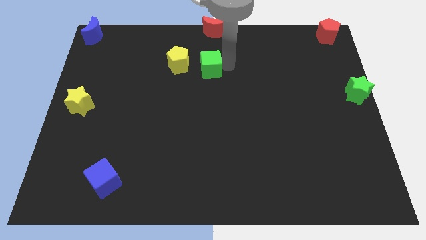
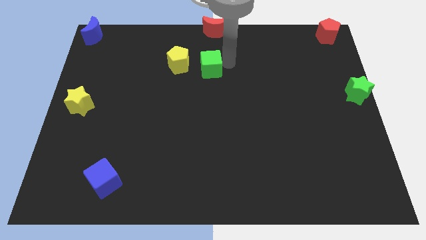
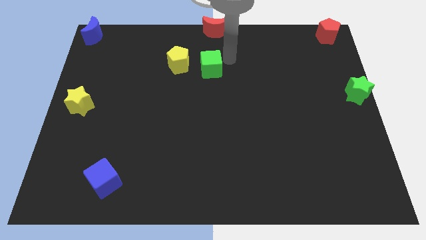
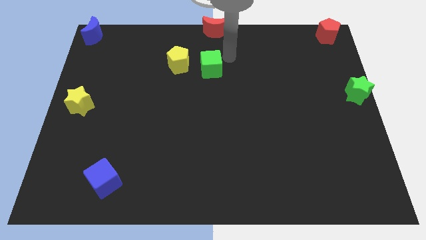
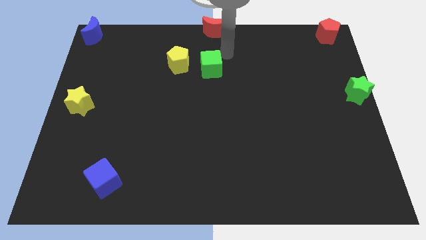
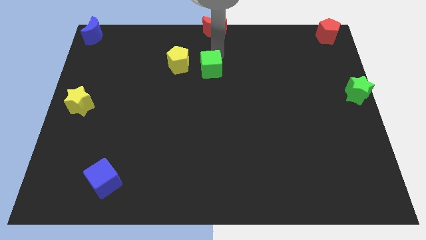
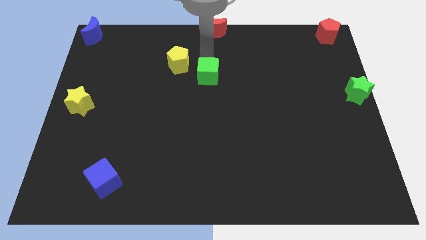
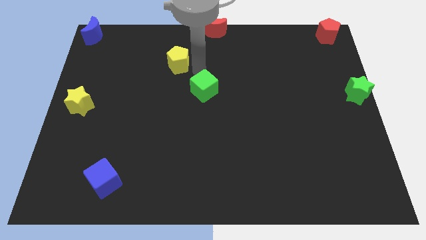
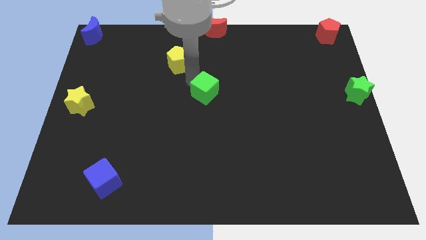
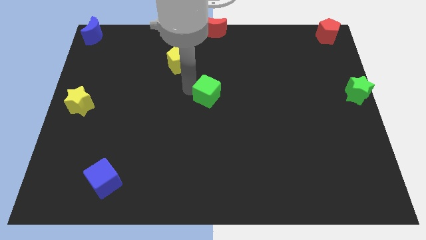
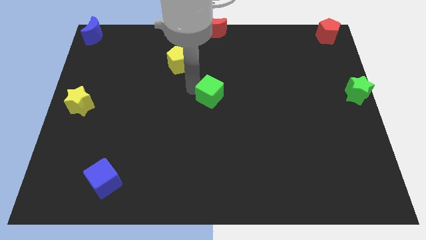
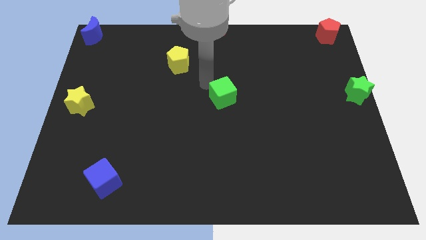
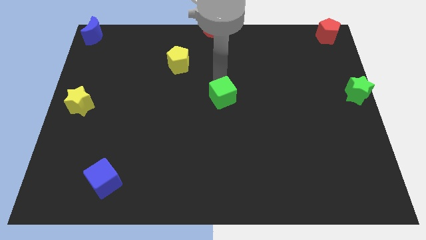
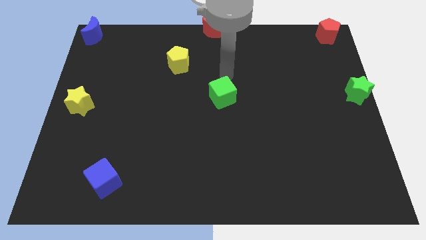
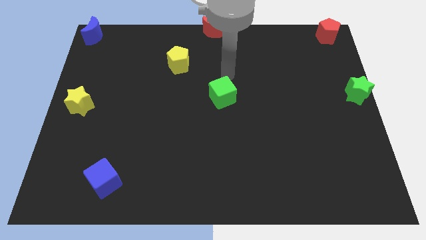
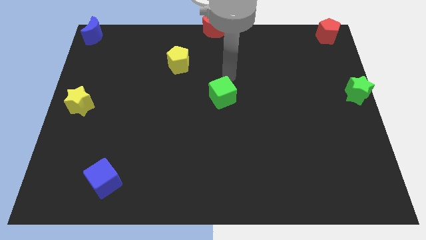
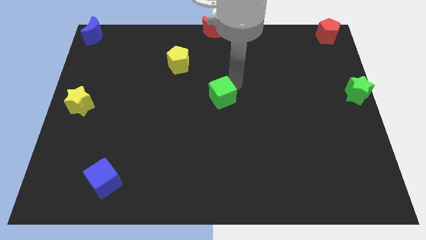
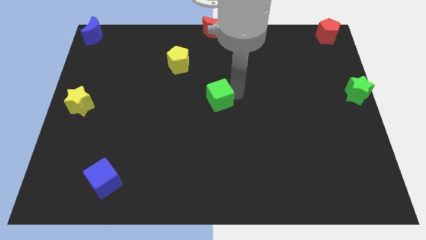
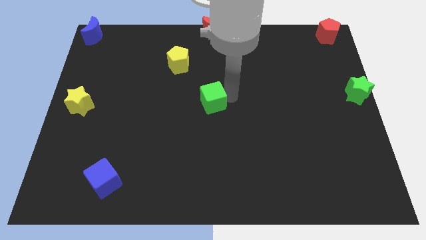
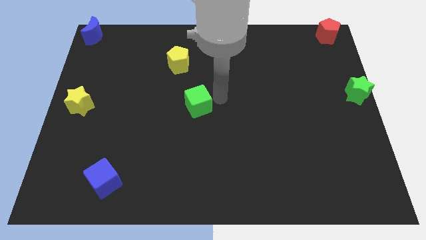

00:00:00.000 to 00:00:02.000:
put the green cube at the center of the board

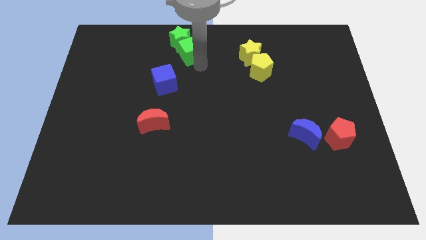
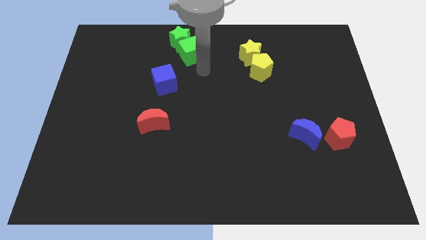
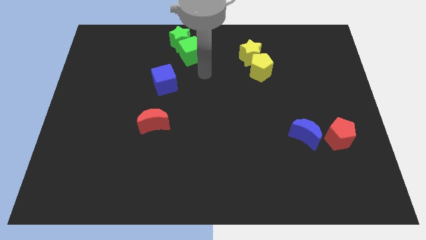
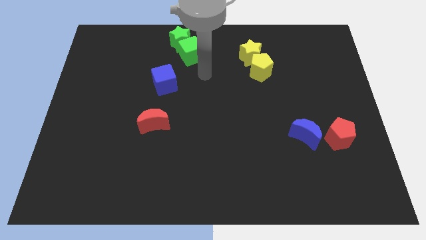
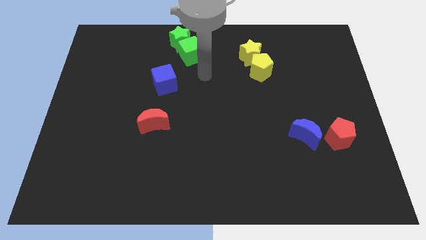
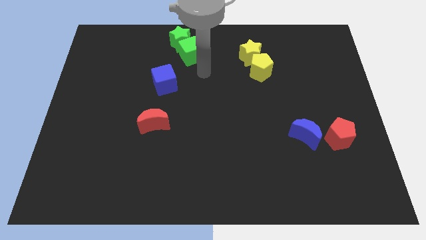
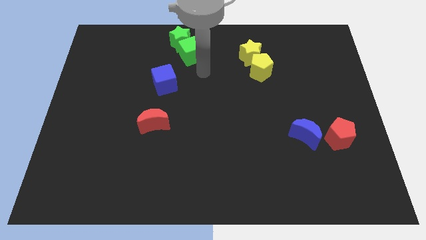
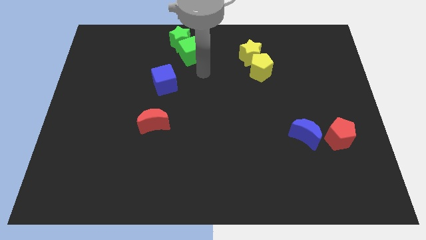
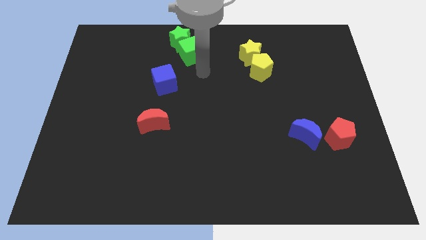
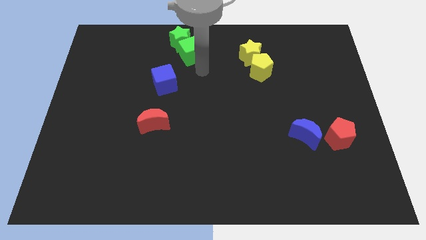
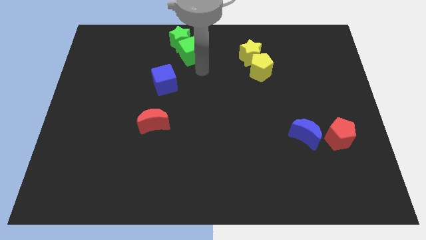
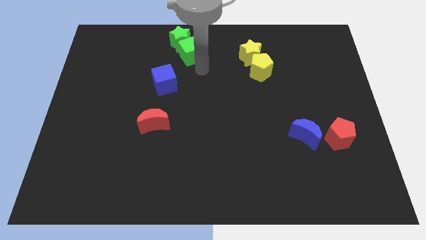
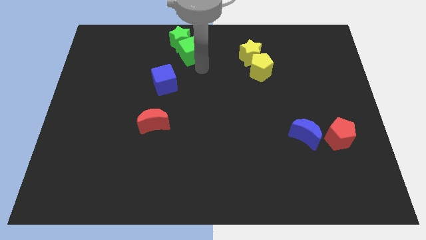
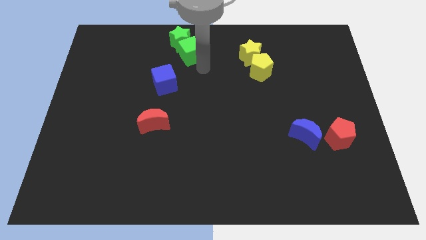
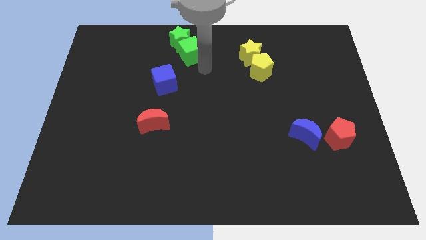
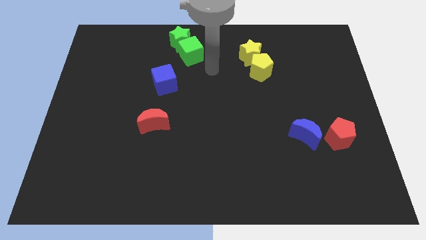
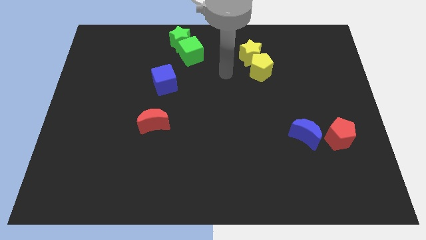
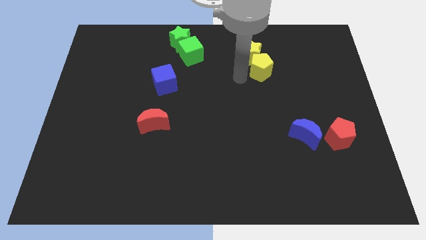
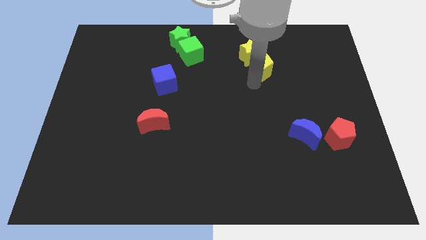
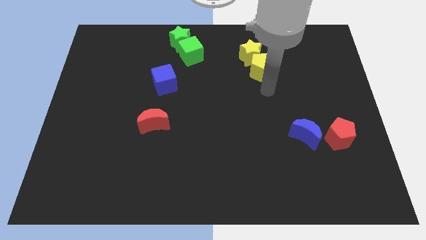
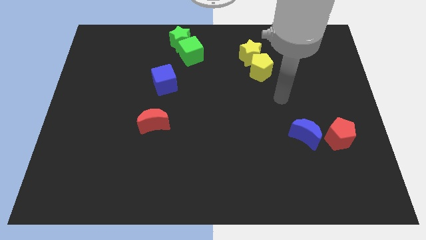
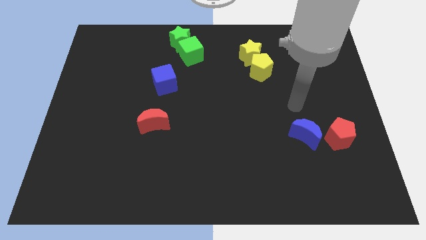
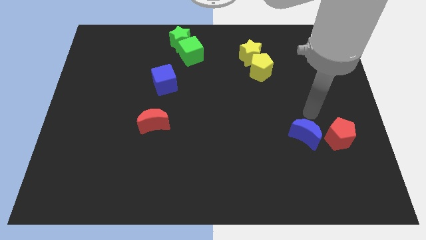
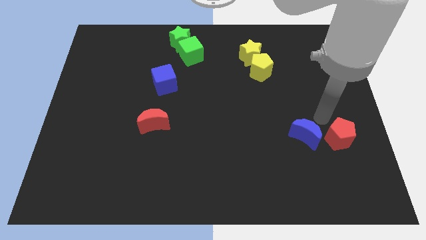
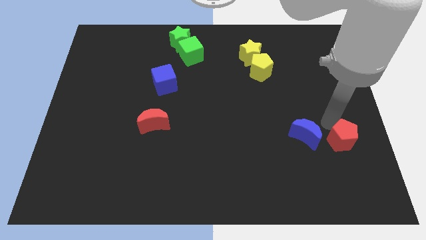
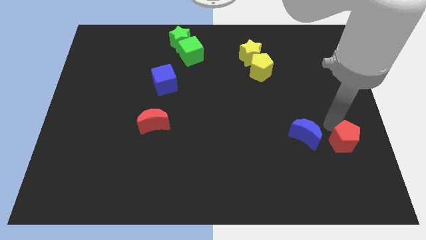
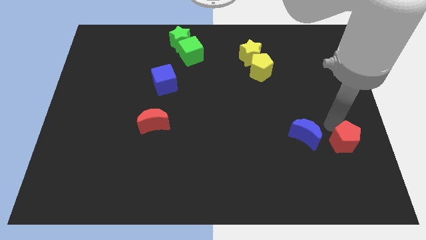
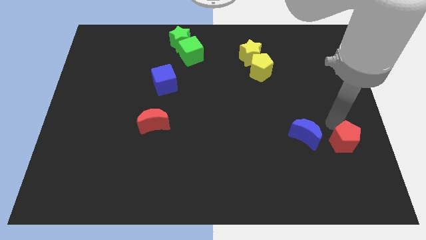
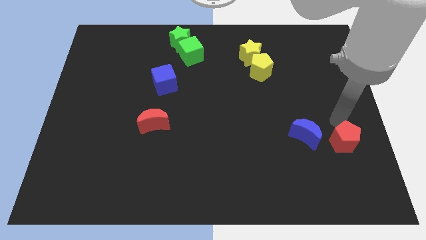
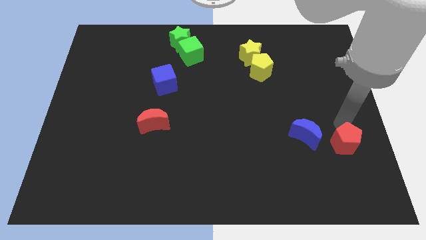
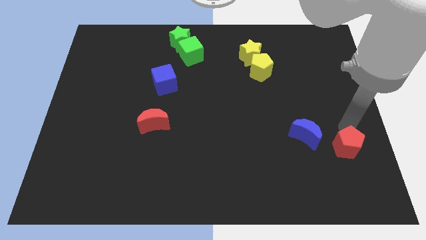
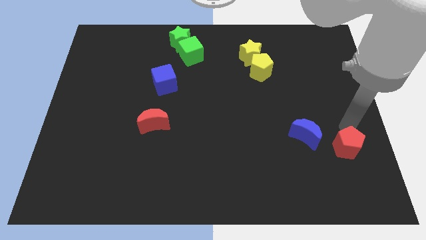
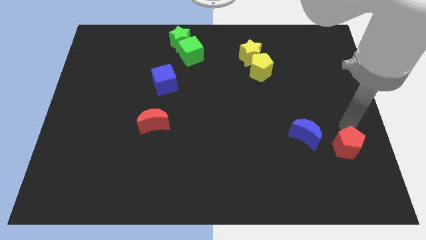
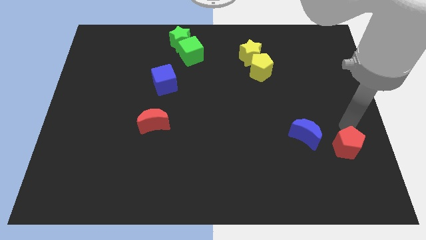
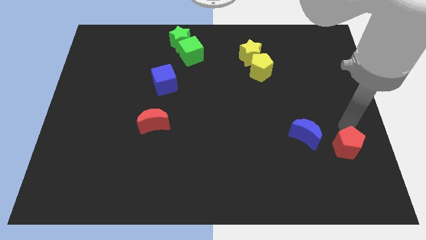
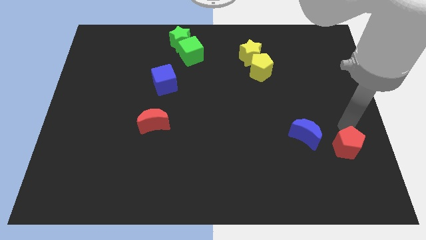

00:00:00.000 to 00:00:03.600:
move the red pentagon slightly to the bottom of the board

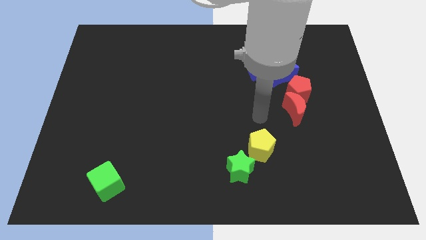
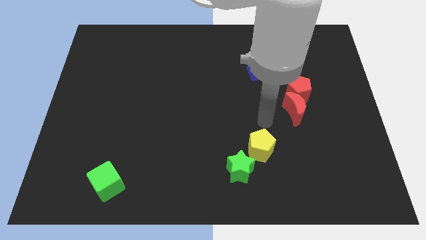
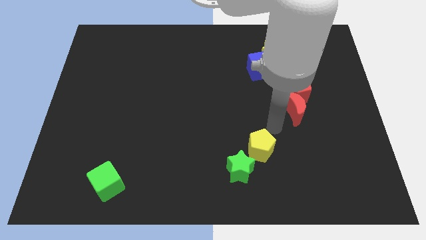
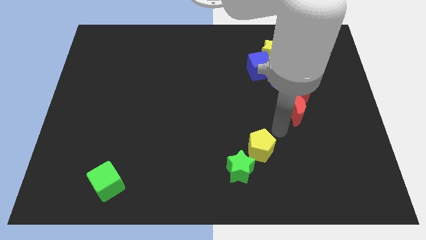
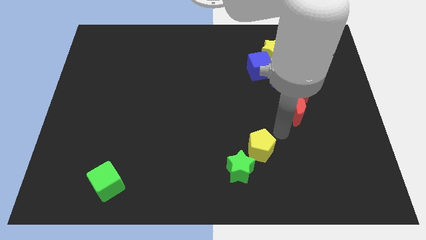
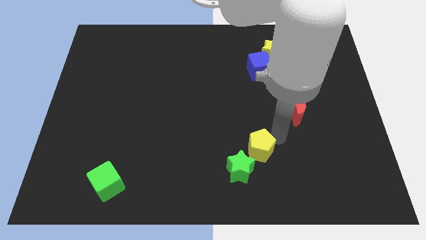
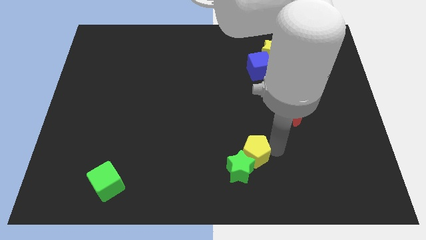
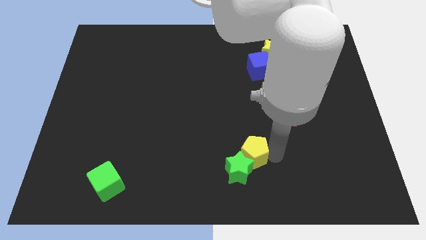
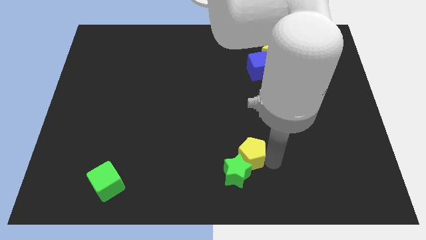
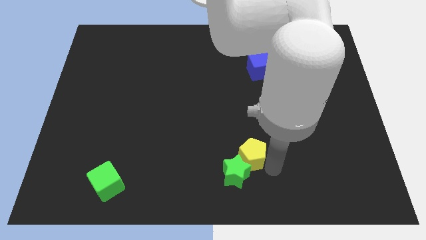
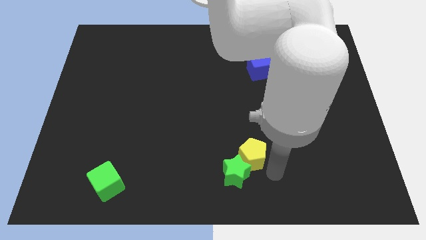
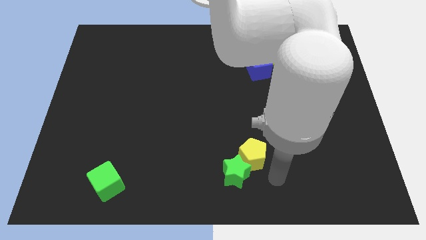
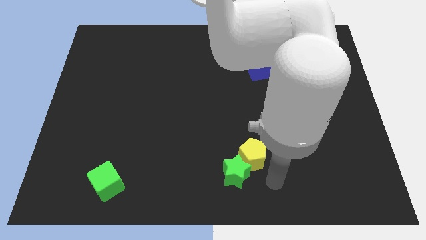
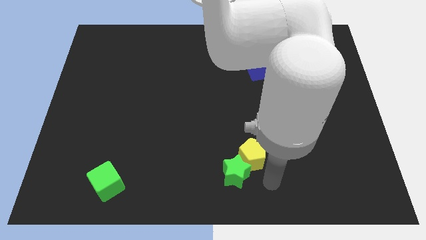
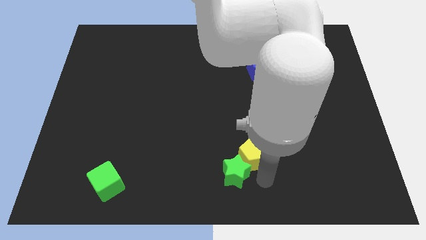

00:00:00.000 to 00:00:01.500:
hit yellow pentagon into green star

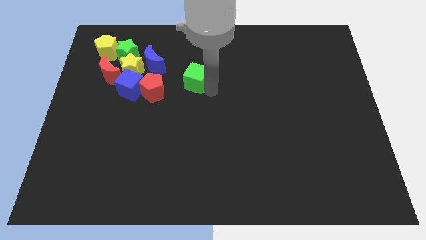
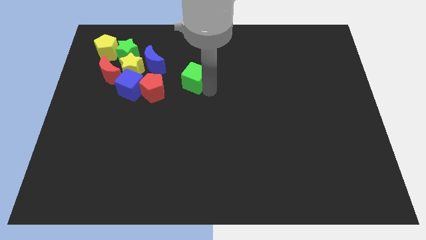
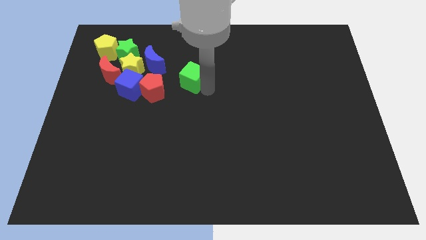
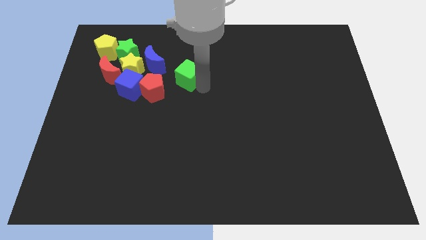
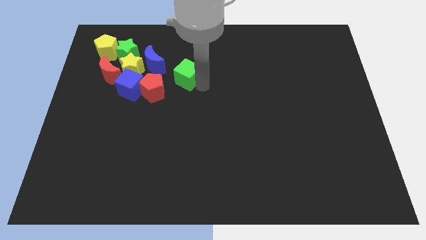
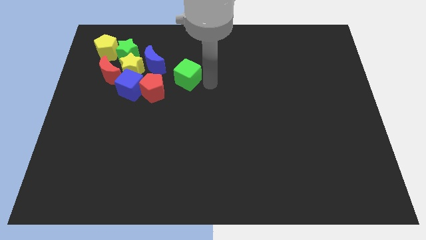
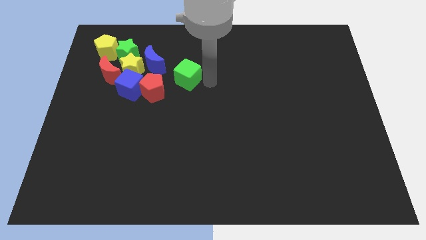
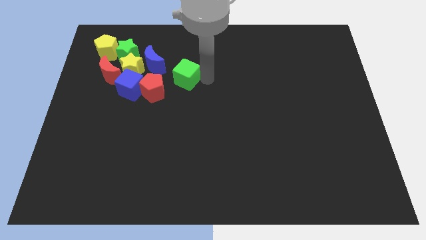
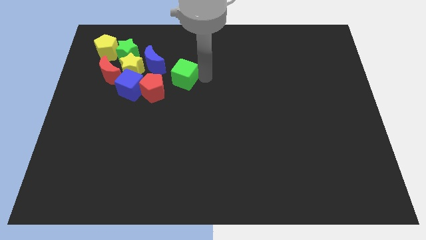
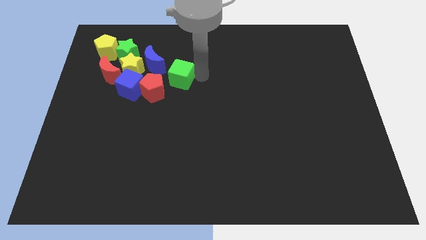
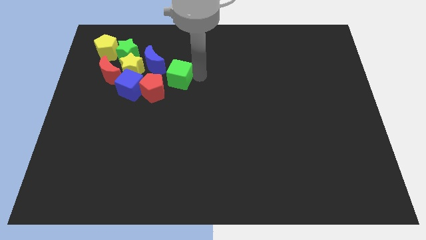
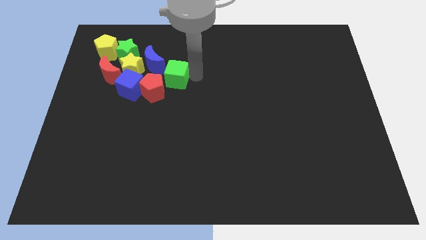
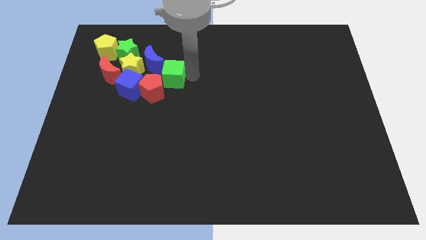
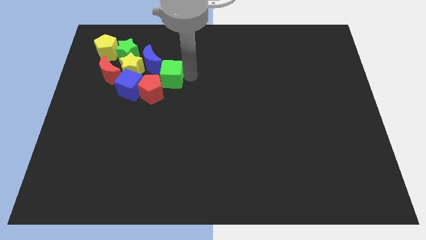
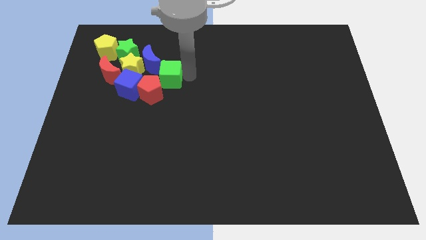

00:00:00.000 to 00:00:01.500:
move the green cube towards the other group of blocks

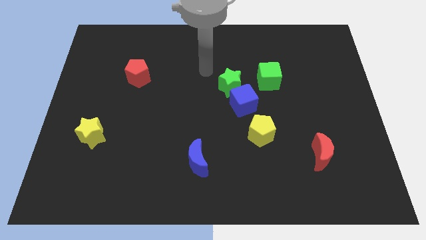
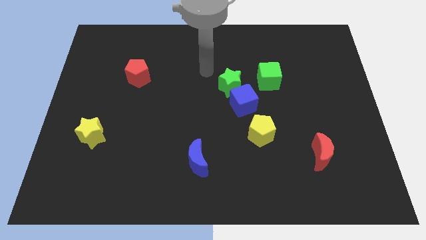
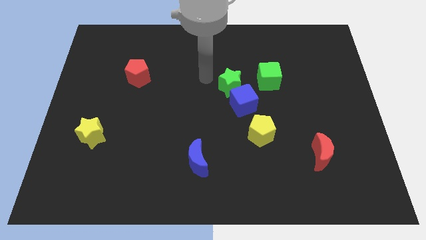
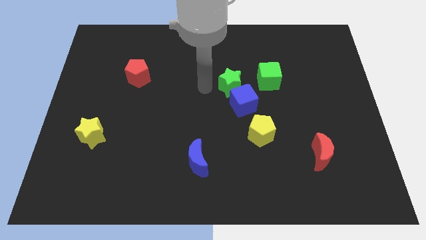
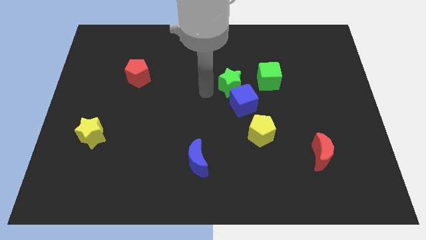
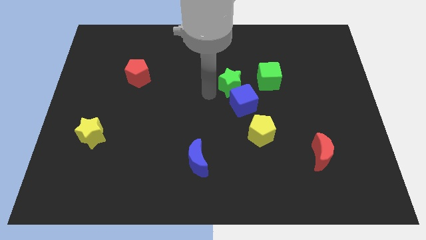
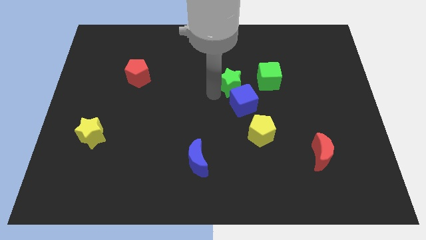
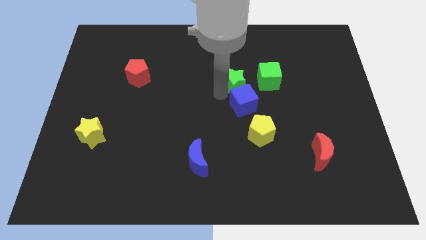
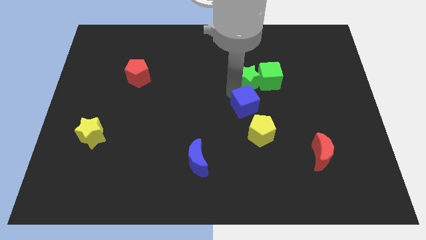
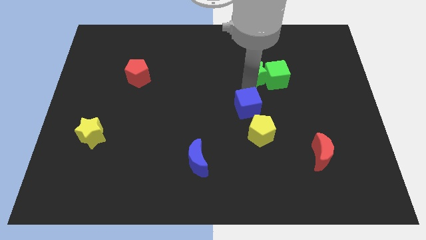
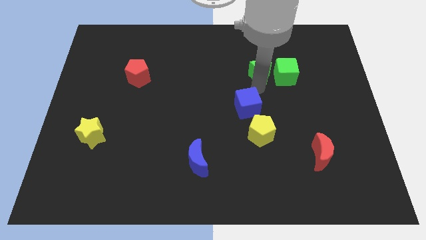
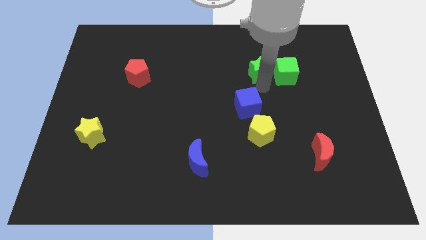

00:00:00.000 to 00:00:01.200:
move green star into the green cube
